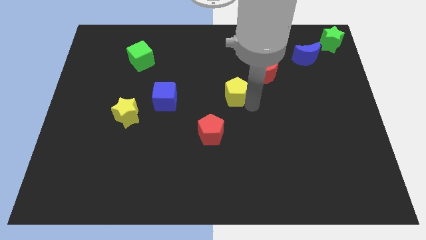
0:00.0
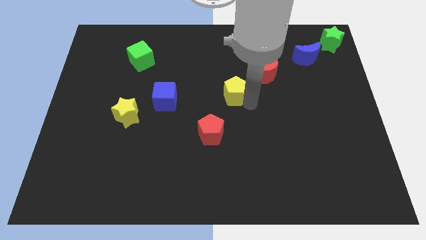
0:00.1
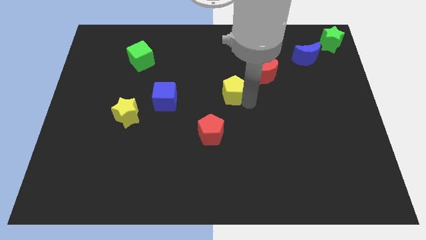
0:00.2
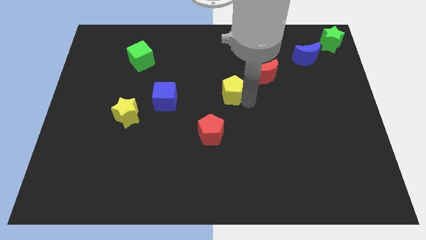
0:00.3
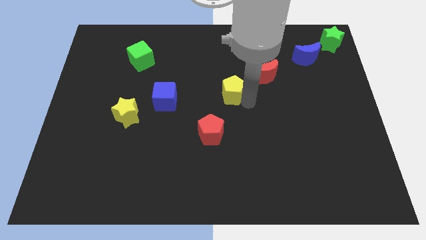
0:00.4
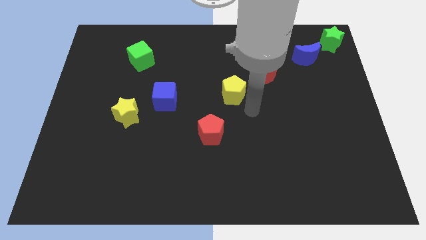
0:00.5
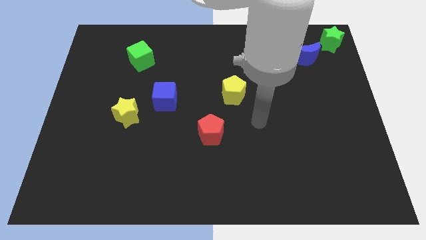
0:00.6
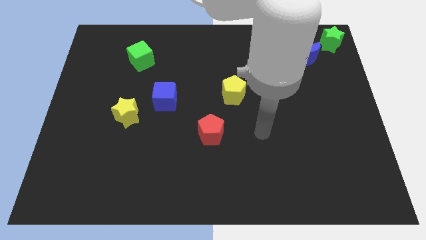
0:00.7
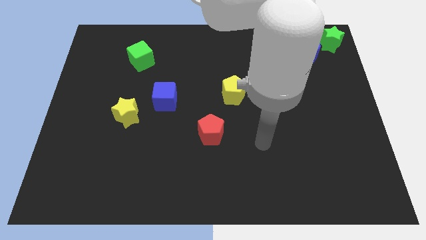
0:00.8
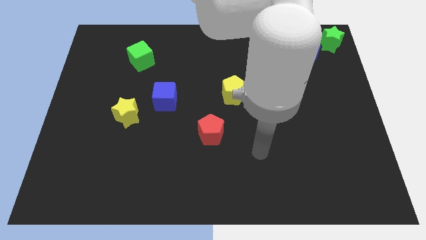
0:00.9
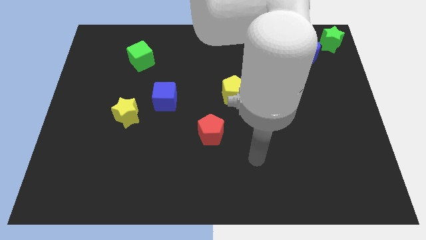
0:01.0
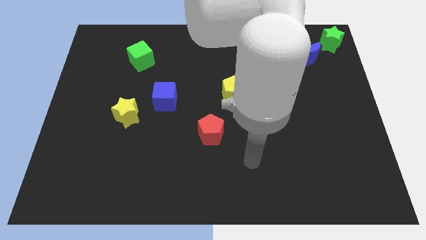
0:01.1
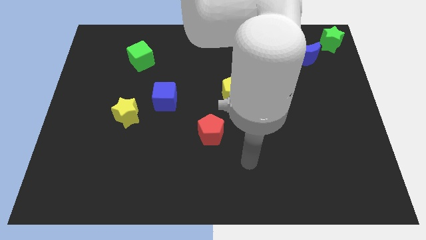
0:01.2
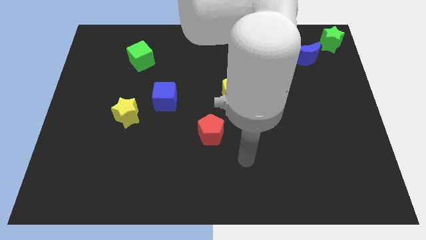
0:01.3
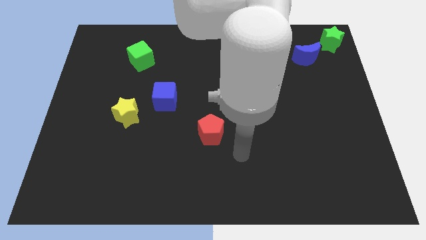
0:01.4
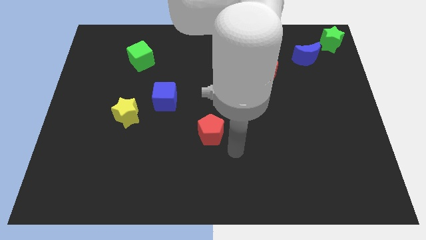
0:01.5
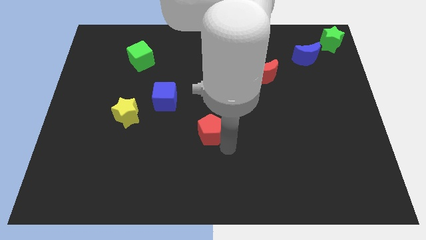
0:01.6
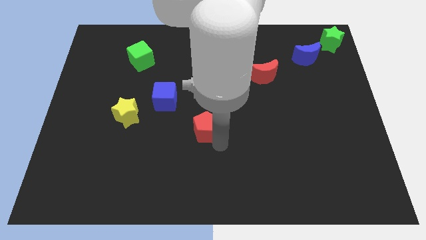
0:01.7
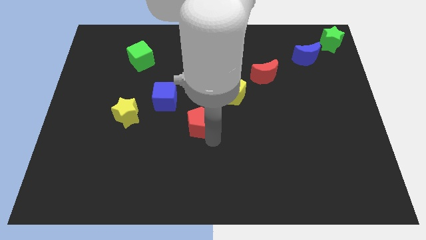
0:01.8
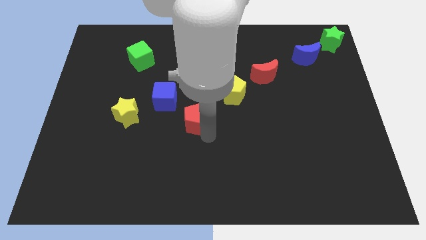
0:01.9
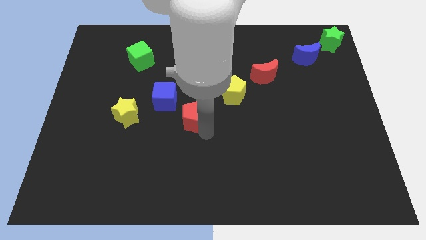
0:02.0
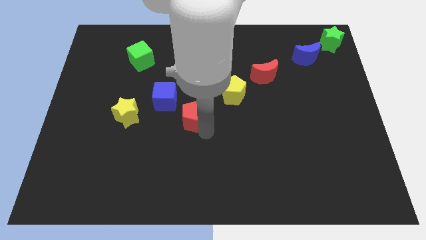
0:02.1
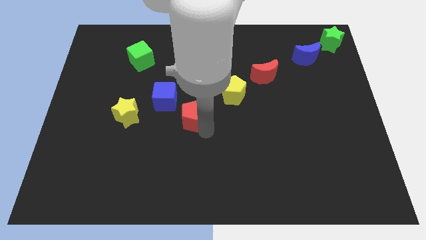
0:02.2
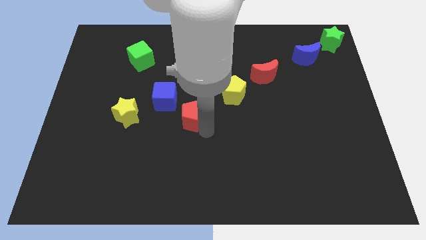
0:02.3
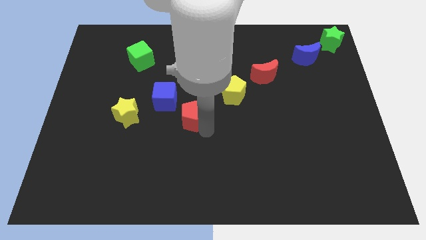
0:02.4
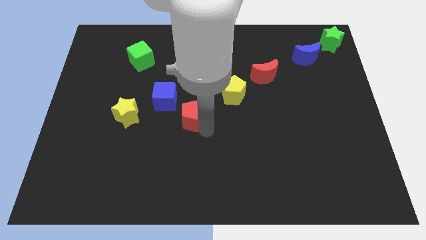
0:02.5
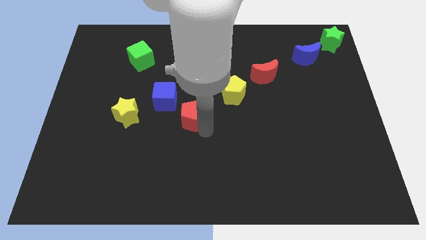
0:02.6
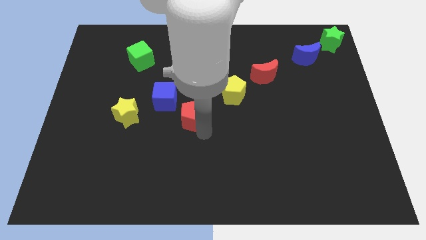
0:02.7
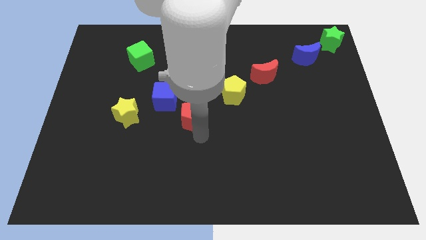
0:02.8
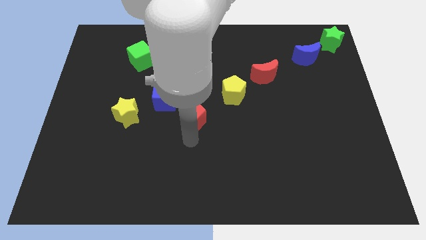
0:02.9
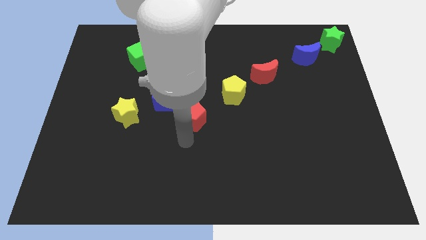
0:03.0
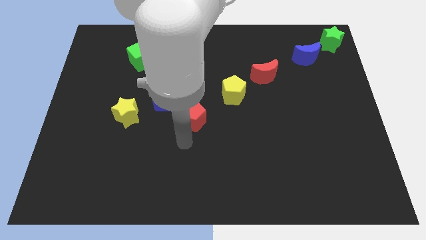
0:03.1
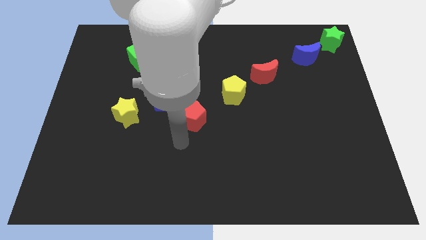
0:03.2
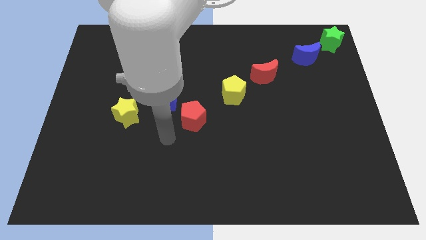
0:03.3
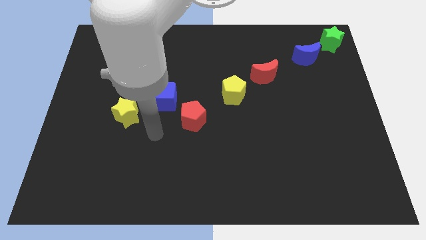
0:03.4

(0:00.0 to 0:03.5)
push the red pentagon to the bottom right of the blue cube

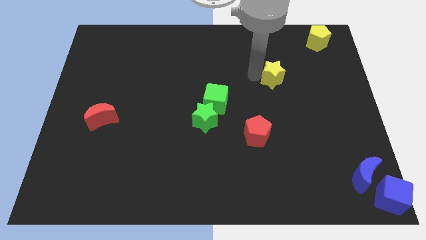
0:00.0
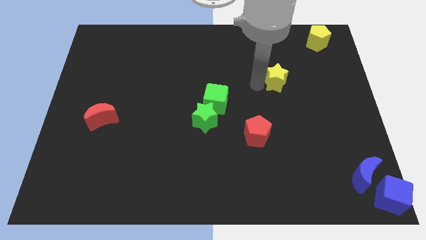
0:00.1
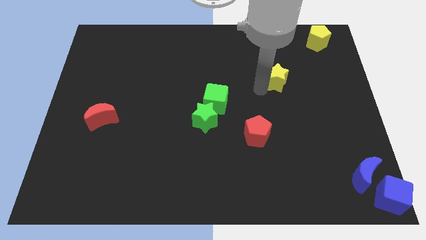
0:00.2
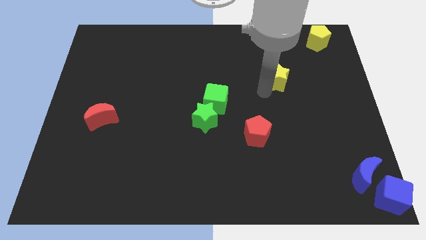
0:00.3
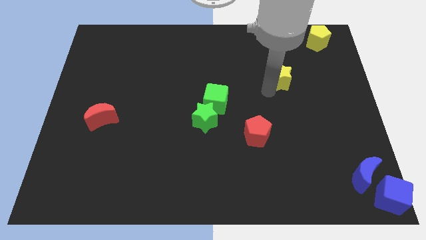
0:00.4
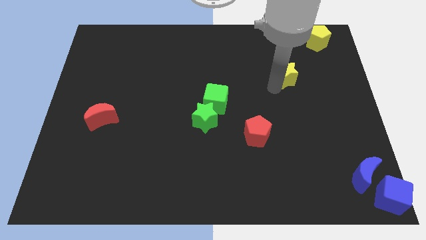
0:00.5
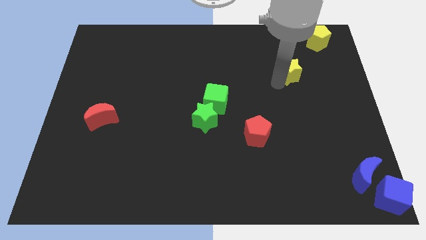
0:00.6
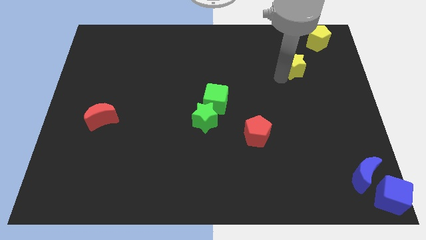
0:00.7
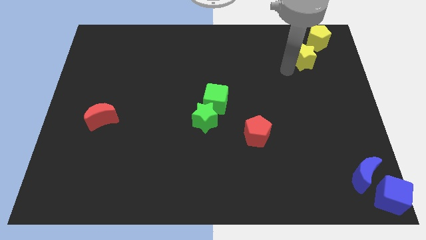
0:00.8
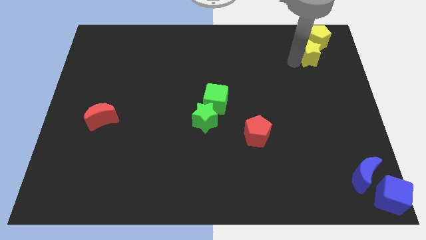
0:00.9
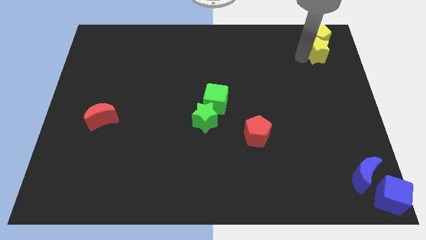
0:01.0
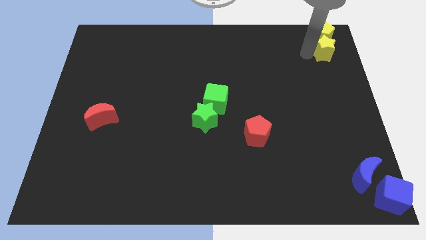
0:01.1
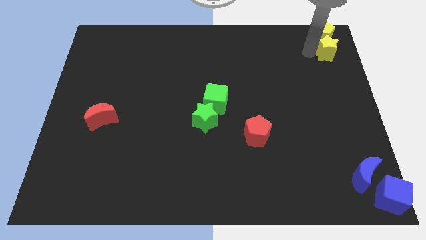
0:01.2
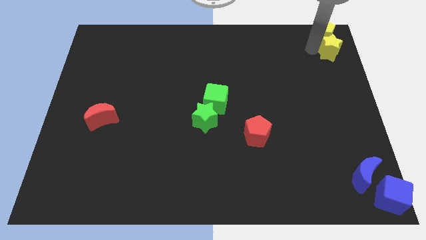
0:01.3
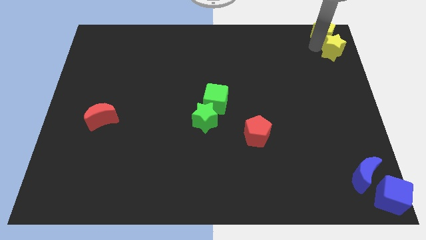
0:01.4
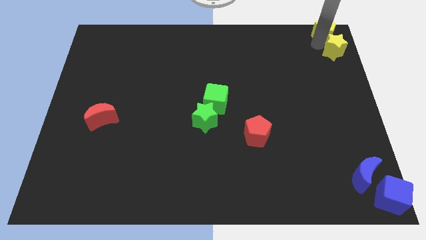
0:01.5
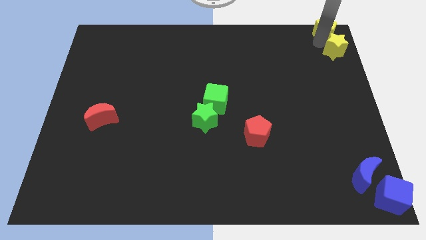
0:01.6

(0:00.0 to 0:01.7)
place yellow star below the yellow pentagon

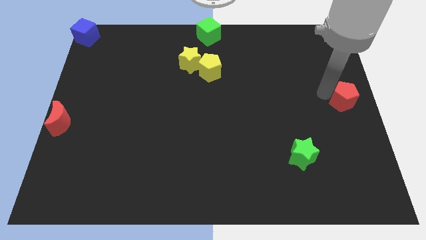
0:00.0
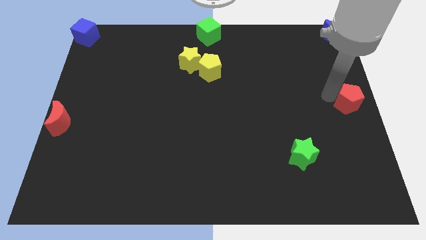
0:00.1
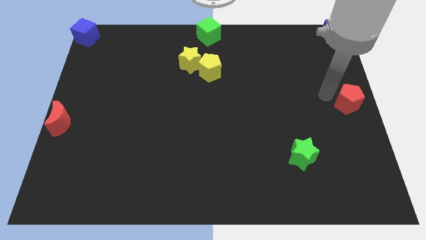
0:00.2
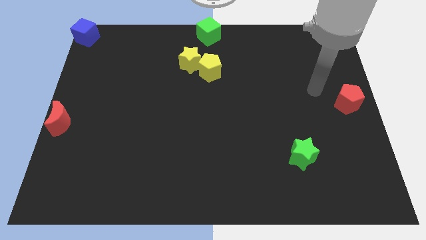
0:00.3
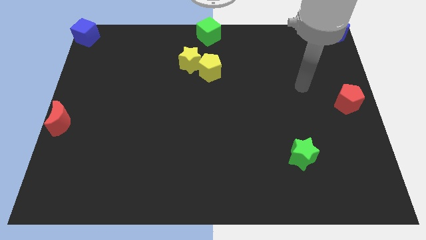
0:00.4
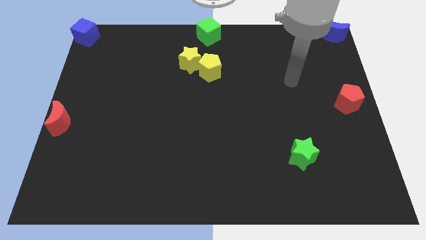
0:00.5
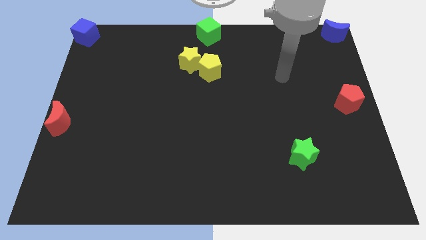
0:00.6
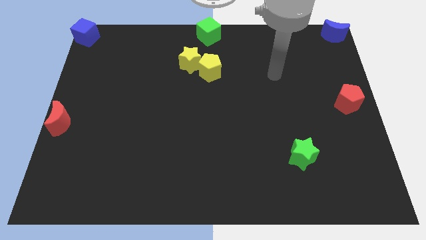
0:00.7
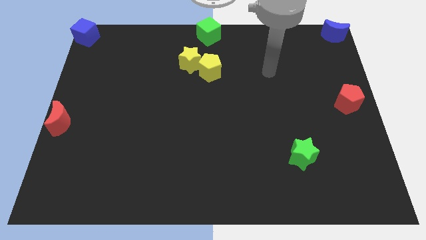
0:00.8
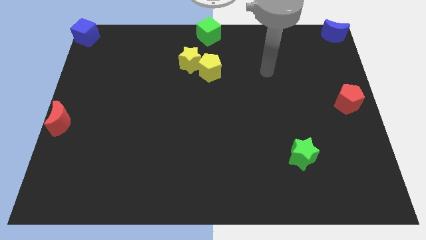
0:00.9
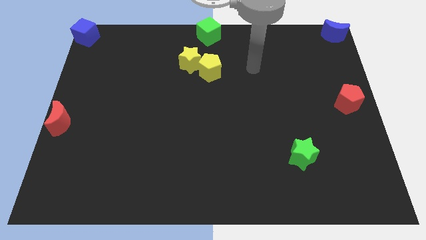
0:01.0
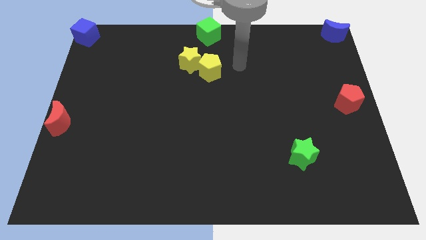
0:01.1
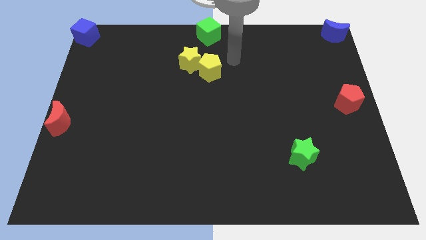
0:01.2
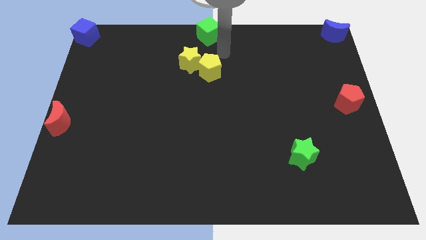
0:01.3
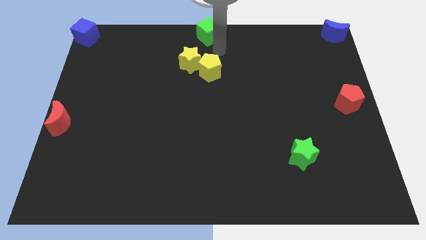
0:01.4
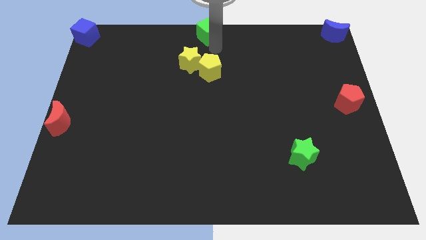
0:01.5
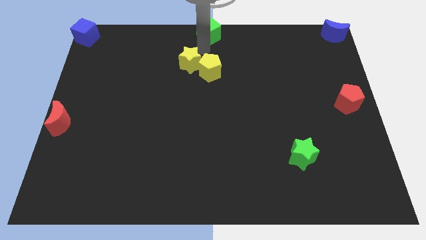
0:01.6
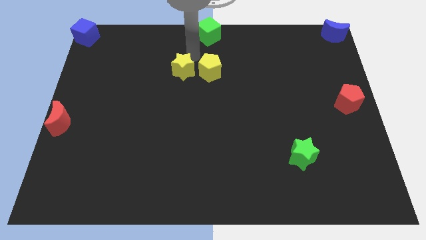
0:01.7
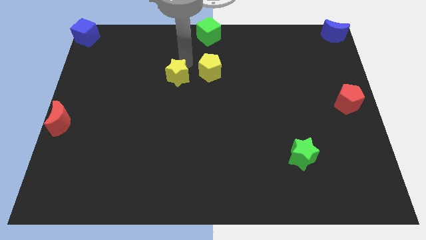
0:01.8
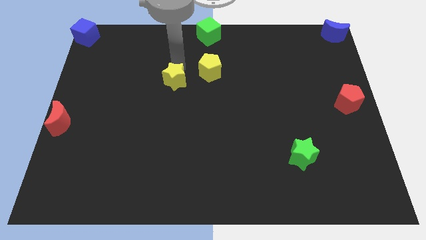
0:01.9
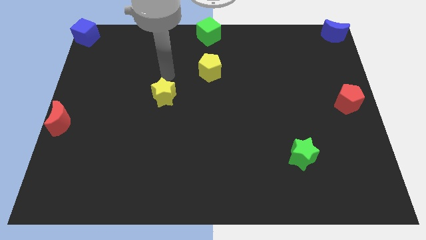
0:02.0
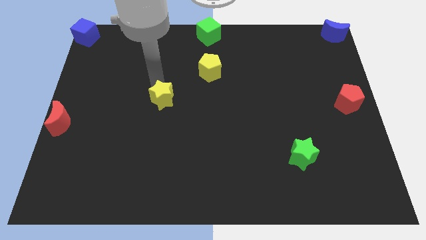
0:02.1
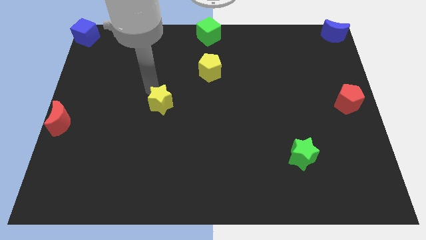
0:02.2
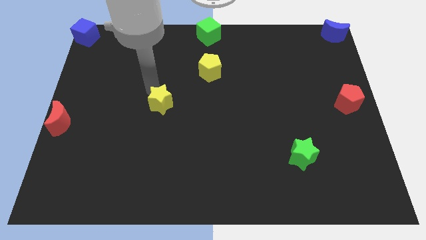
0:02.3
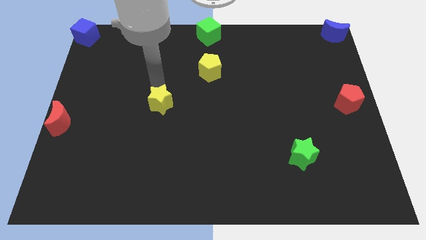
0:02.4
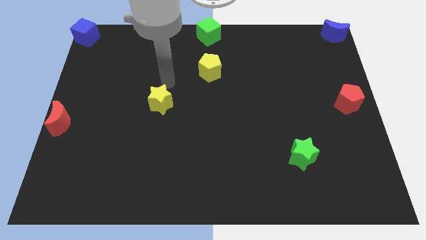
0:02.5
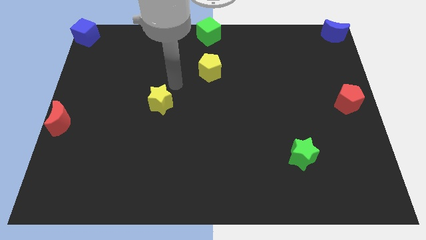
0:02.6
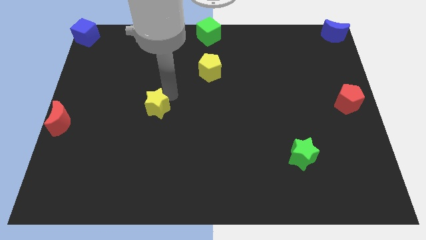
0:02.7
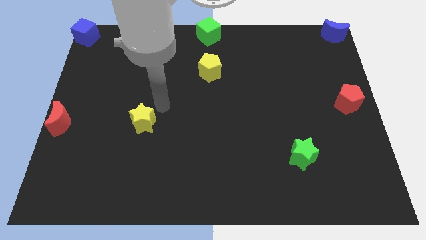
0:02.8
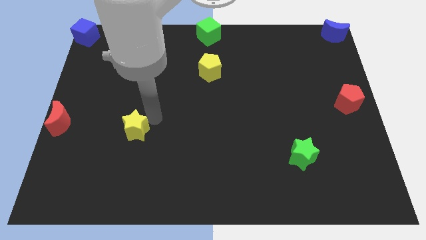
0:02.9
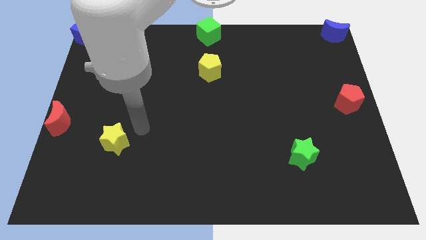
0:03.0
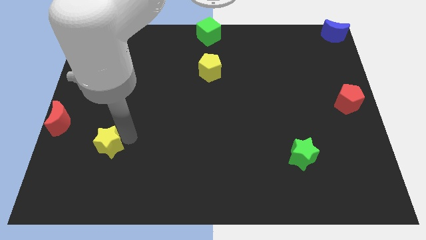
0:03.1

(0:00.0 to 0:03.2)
slide the yellow star towards the bottom left of the board

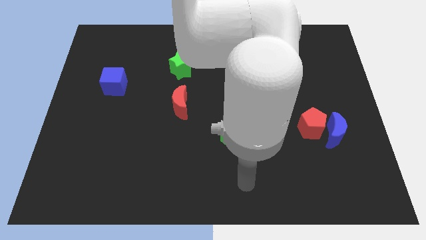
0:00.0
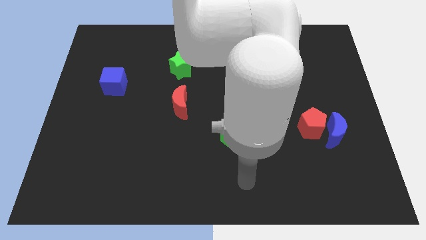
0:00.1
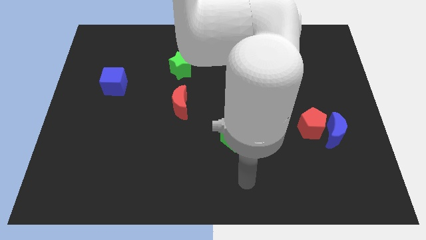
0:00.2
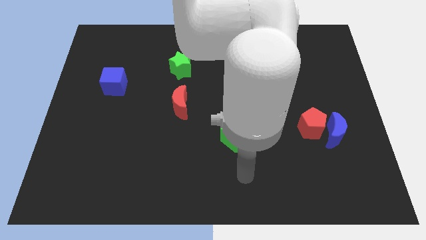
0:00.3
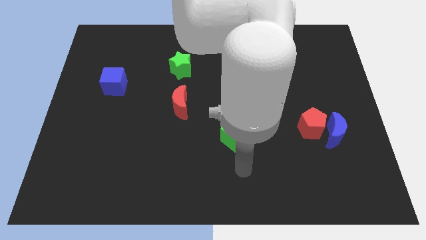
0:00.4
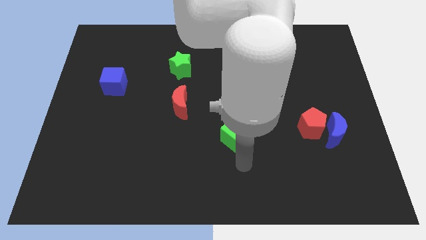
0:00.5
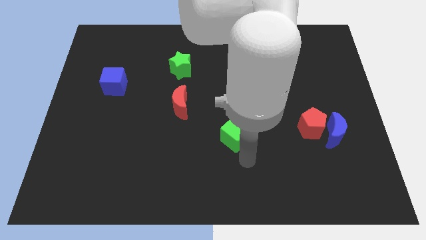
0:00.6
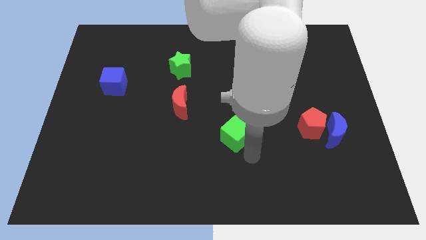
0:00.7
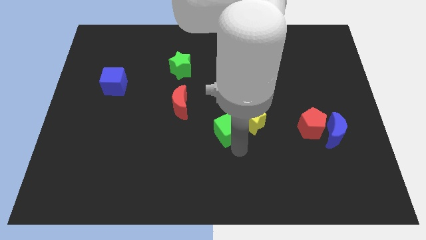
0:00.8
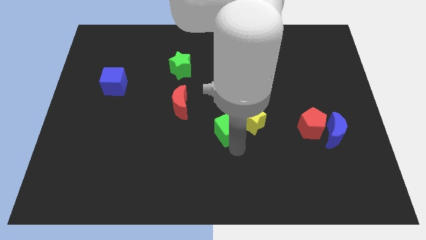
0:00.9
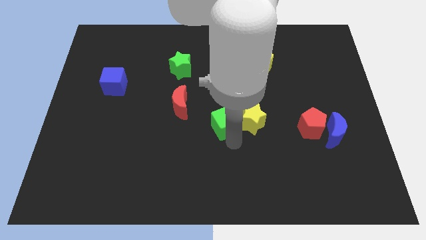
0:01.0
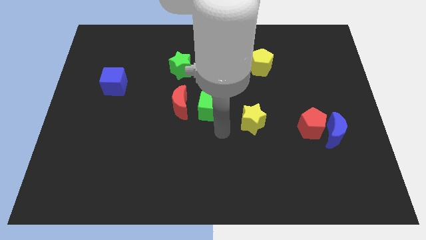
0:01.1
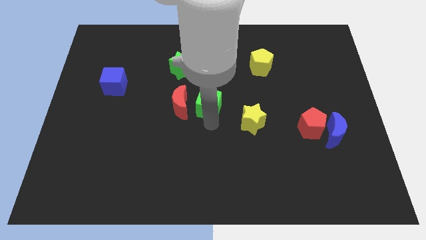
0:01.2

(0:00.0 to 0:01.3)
move the green cube to the center of the board
